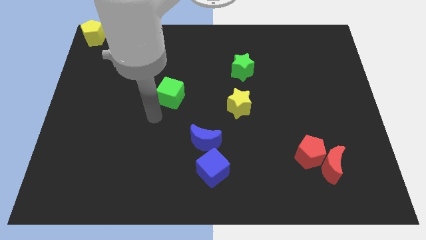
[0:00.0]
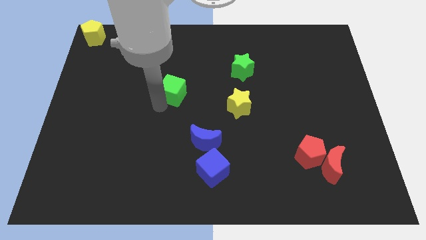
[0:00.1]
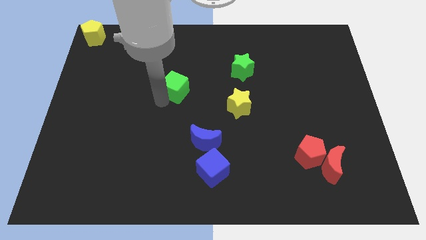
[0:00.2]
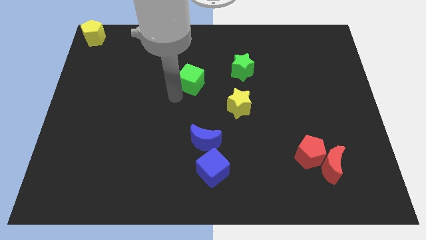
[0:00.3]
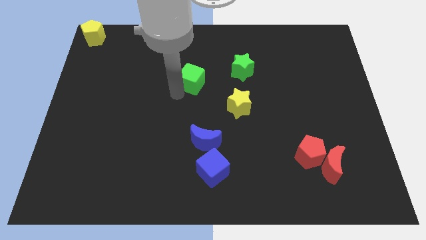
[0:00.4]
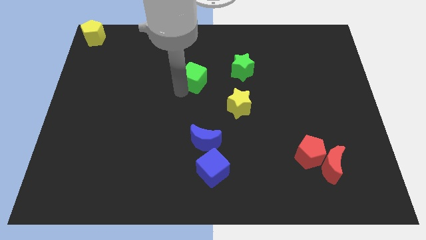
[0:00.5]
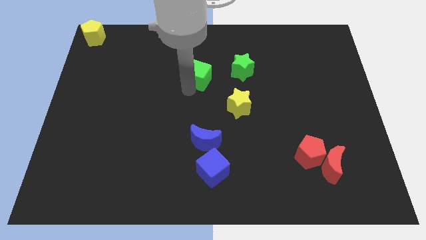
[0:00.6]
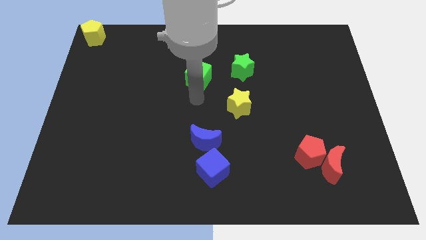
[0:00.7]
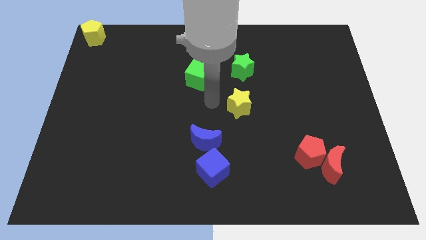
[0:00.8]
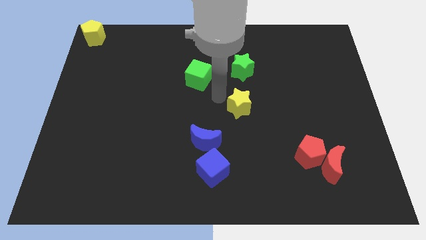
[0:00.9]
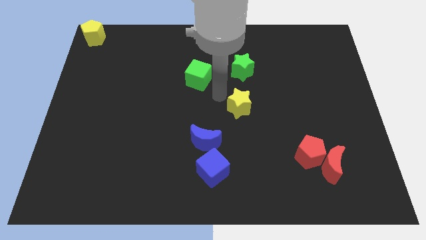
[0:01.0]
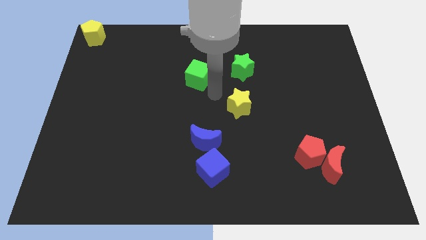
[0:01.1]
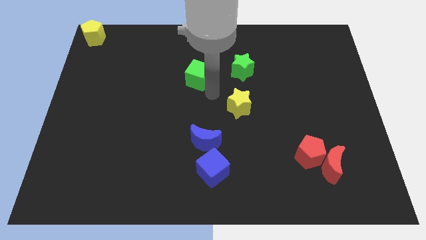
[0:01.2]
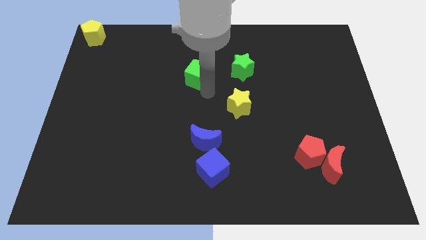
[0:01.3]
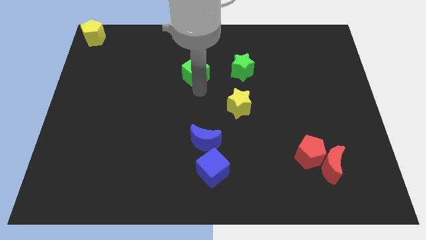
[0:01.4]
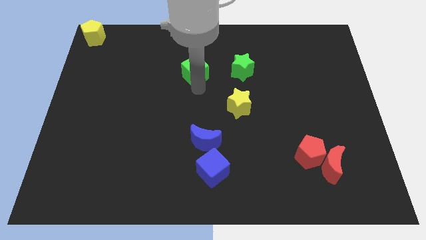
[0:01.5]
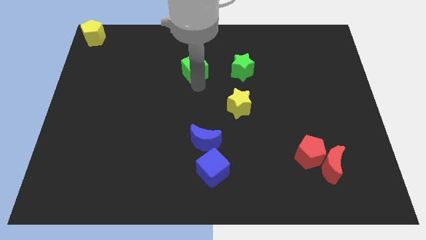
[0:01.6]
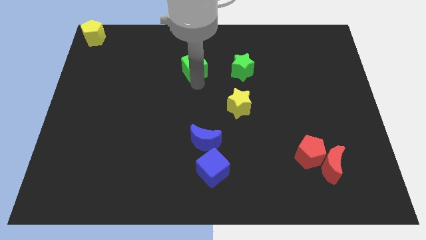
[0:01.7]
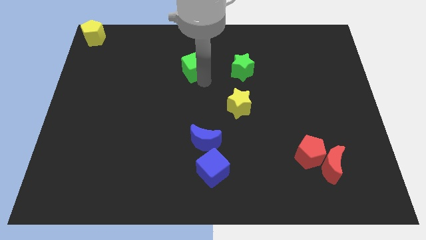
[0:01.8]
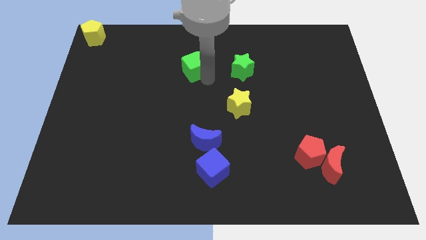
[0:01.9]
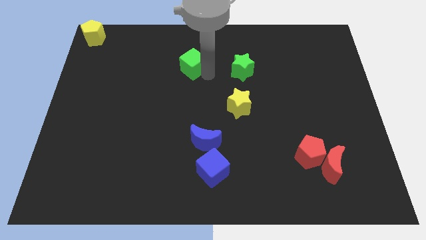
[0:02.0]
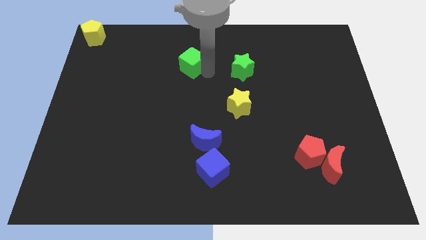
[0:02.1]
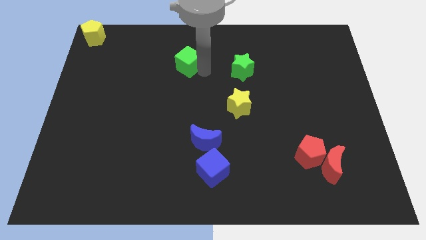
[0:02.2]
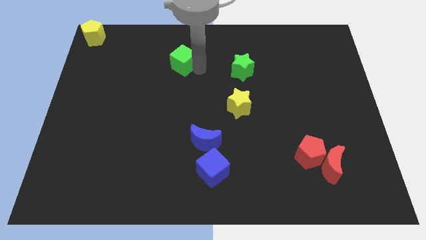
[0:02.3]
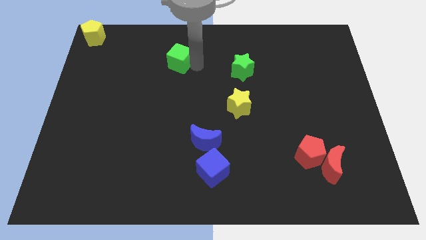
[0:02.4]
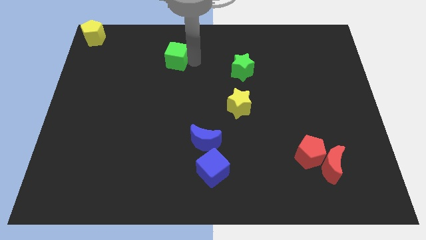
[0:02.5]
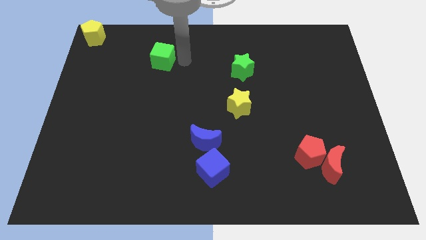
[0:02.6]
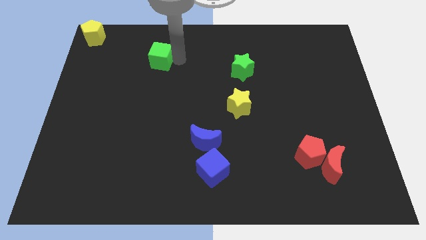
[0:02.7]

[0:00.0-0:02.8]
move the green cube between green star and yellow pentagon

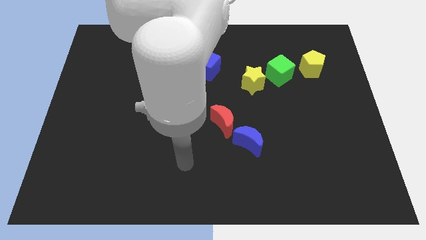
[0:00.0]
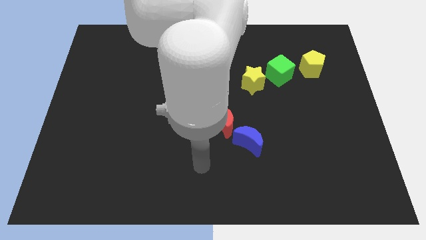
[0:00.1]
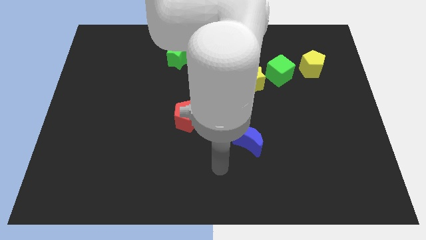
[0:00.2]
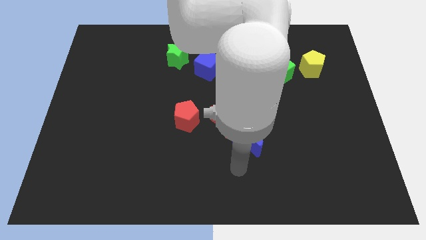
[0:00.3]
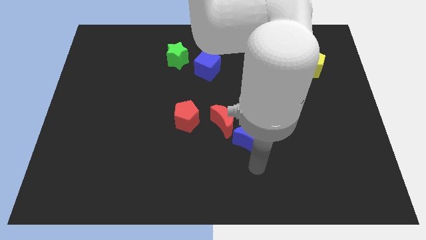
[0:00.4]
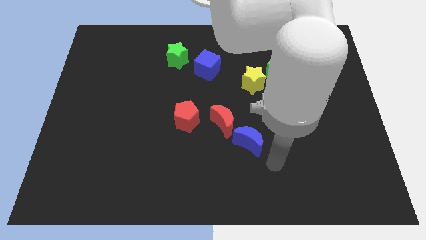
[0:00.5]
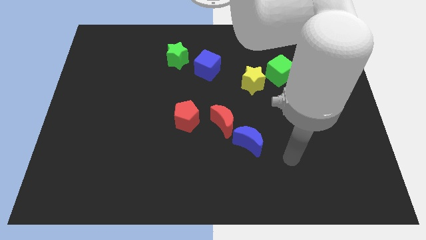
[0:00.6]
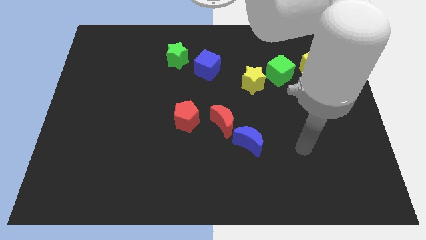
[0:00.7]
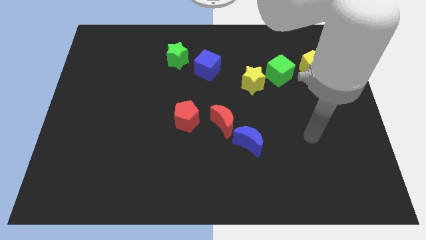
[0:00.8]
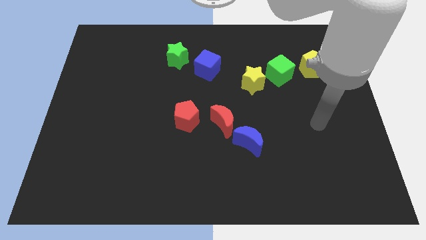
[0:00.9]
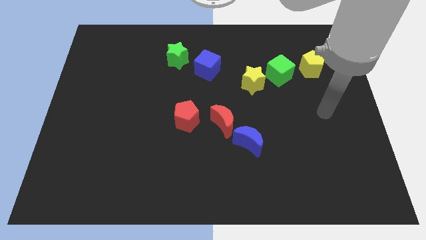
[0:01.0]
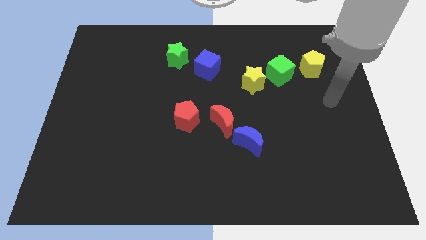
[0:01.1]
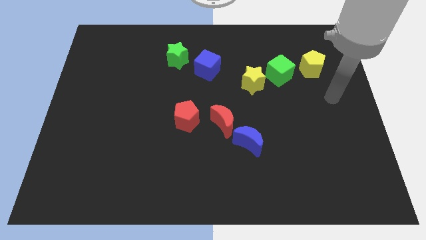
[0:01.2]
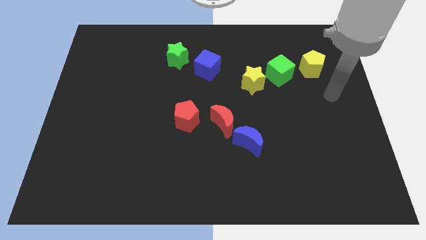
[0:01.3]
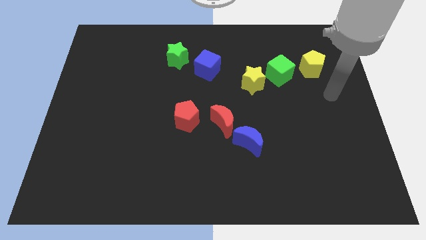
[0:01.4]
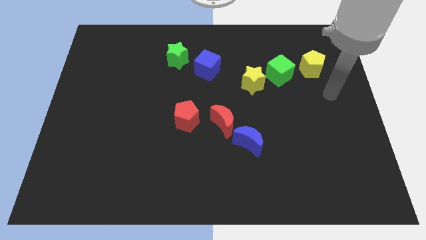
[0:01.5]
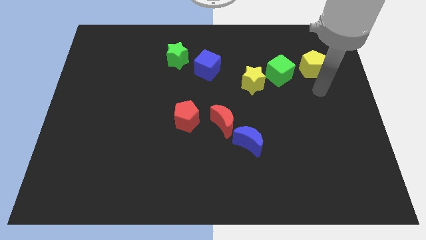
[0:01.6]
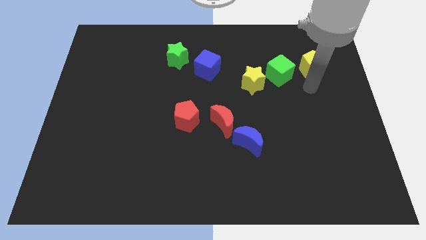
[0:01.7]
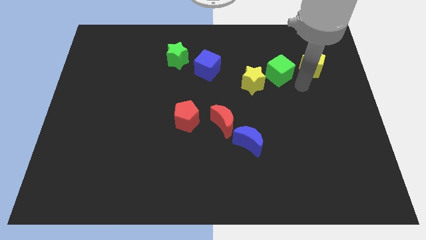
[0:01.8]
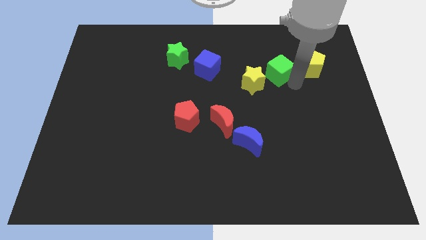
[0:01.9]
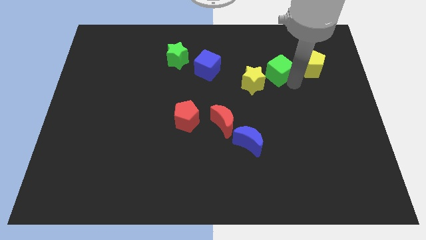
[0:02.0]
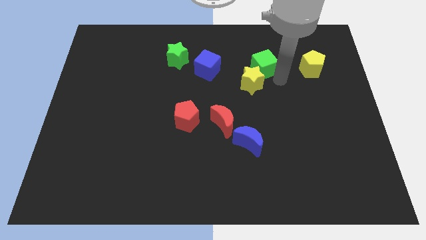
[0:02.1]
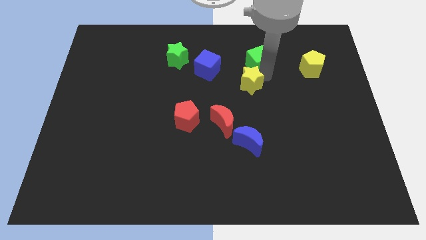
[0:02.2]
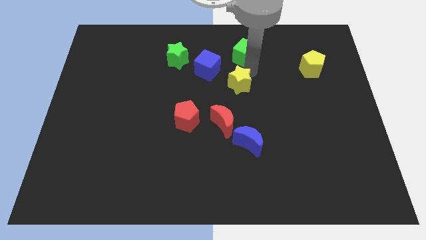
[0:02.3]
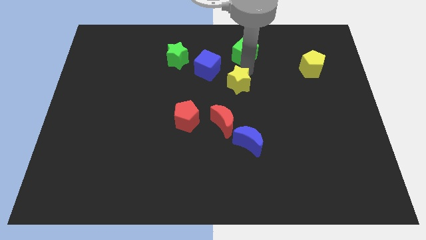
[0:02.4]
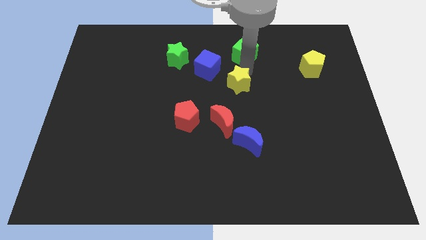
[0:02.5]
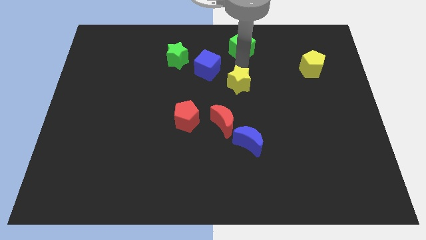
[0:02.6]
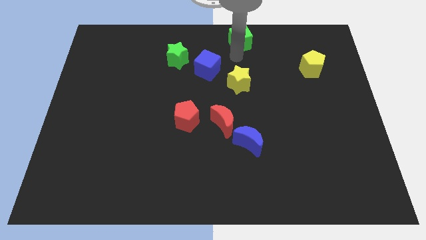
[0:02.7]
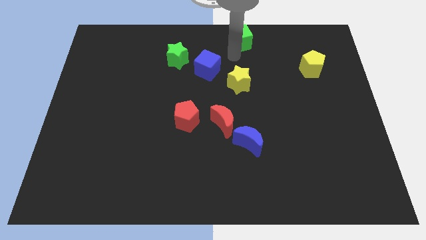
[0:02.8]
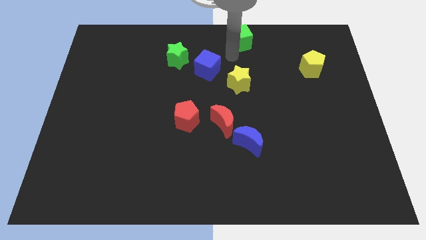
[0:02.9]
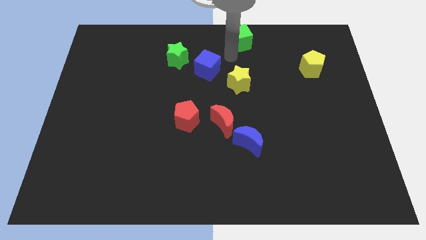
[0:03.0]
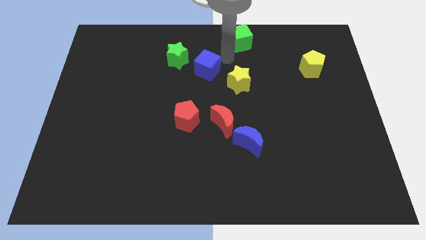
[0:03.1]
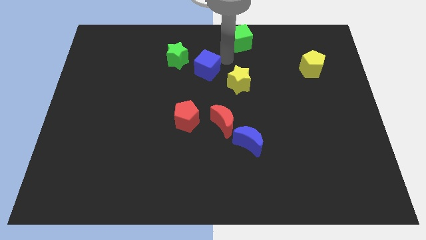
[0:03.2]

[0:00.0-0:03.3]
move the green cube vertically to the top side of the yellow star

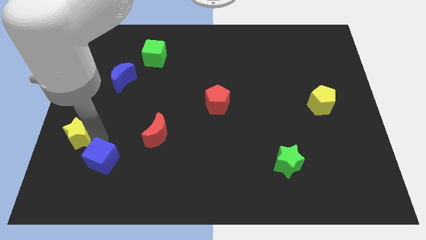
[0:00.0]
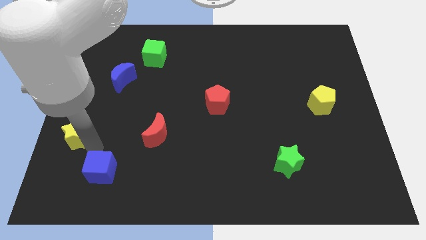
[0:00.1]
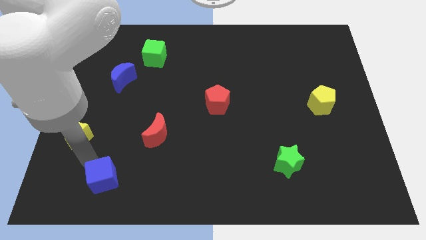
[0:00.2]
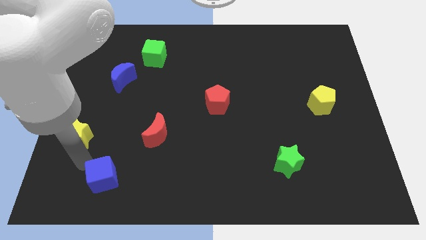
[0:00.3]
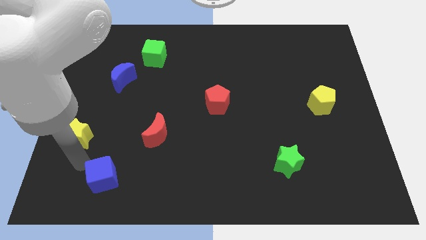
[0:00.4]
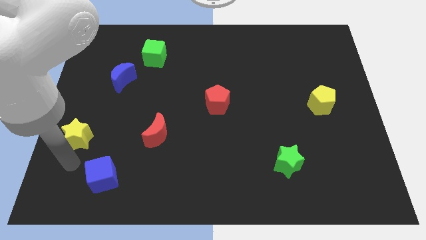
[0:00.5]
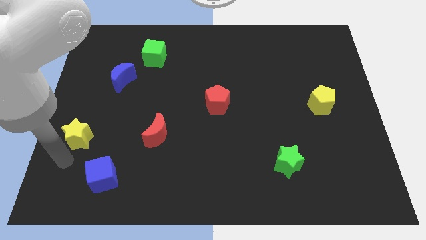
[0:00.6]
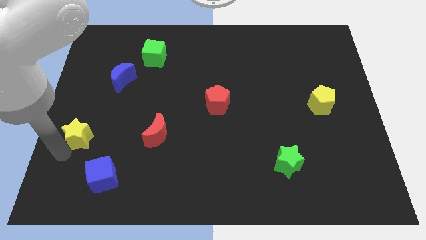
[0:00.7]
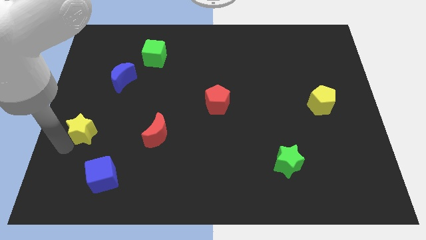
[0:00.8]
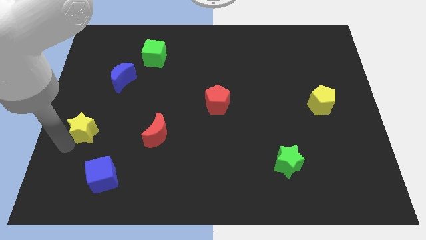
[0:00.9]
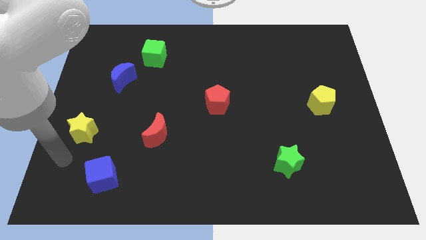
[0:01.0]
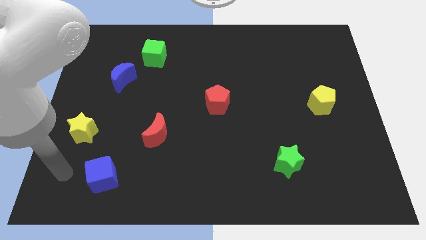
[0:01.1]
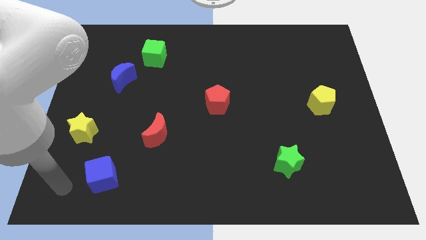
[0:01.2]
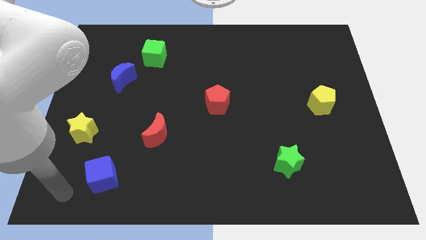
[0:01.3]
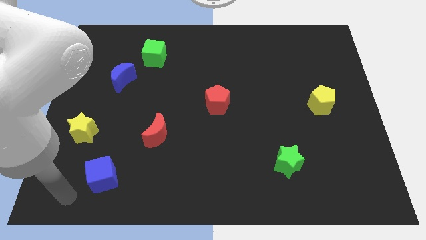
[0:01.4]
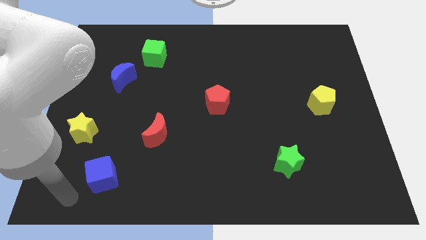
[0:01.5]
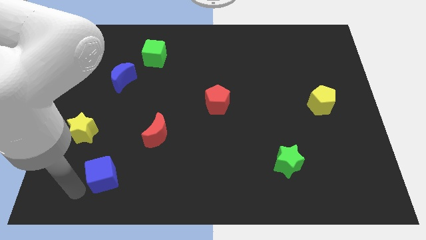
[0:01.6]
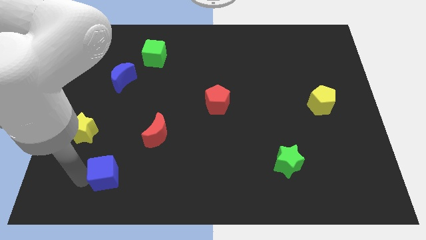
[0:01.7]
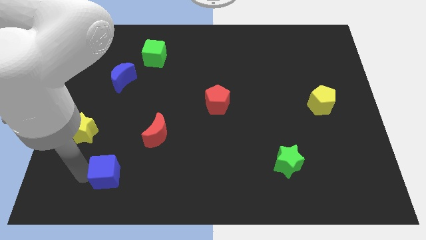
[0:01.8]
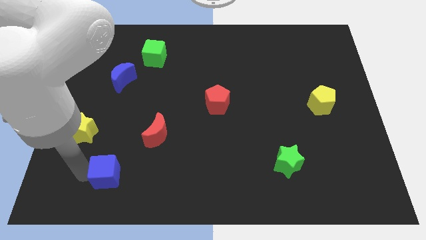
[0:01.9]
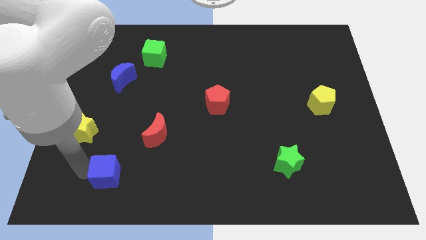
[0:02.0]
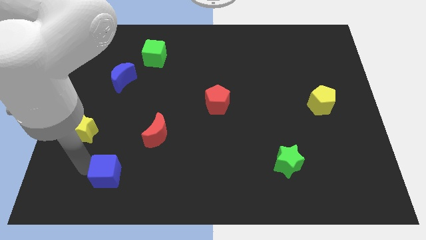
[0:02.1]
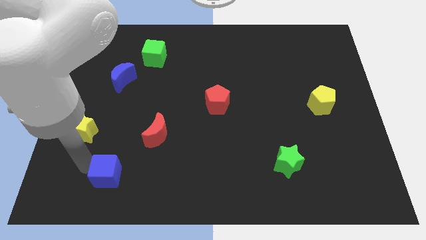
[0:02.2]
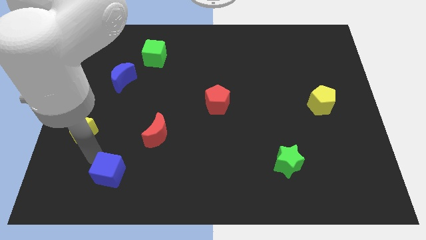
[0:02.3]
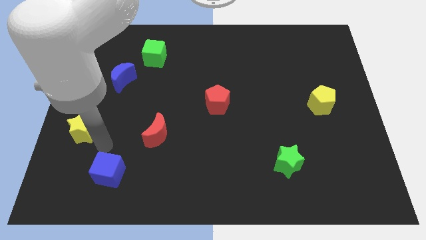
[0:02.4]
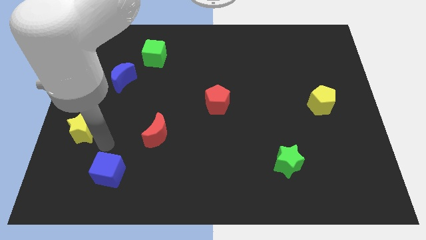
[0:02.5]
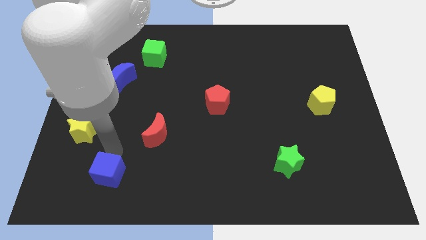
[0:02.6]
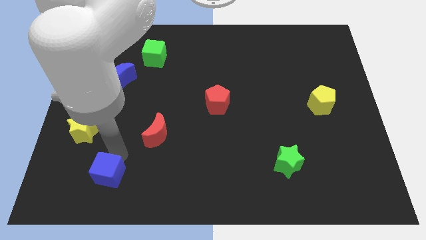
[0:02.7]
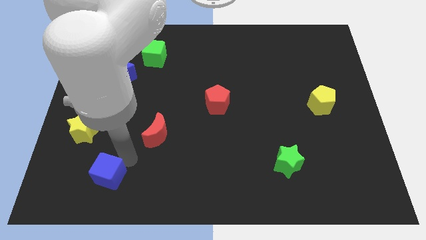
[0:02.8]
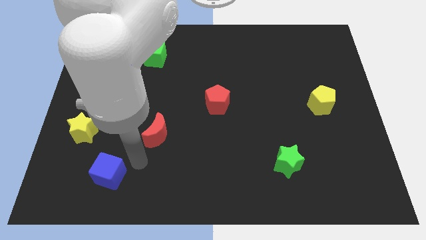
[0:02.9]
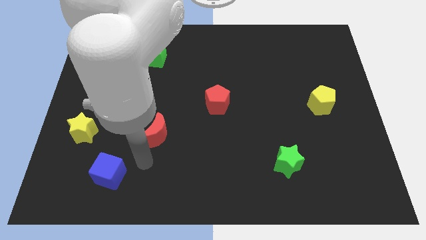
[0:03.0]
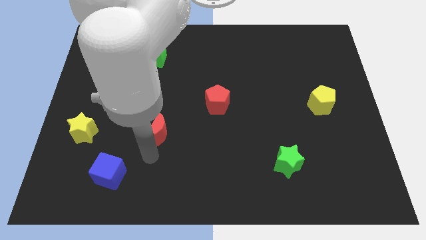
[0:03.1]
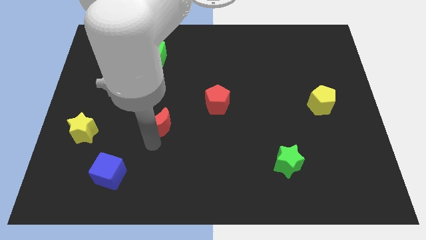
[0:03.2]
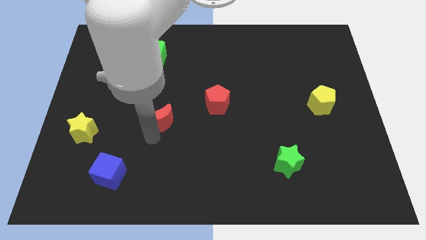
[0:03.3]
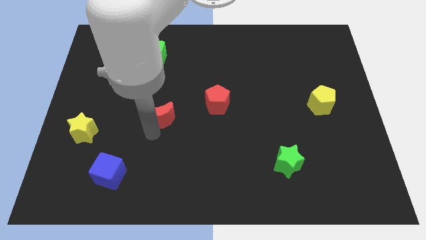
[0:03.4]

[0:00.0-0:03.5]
touch the bottom of yellow star blue cube and red moon
